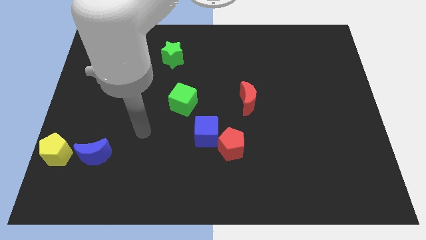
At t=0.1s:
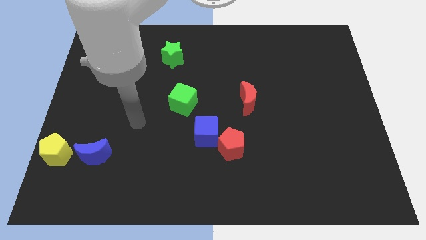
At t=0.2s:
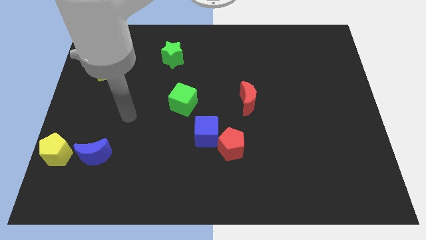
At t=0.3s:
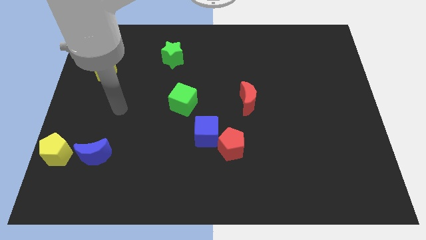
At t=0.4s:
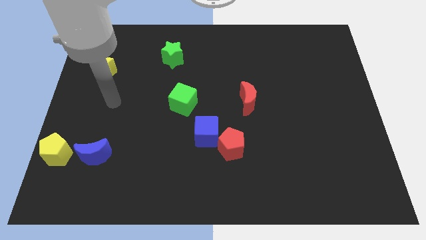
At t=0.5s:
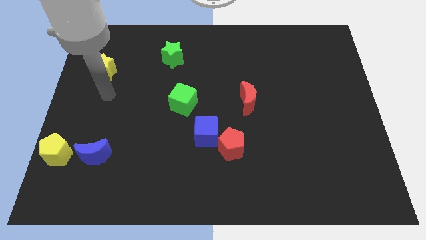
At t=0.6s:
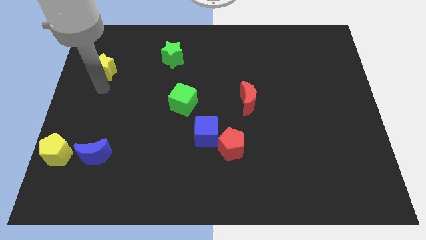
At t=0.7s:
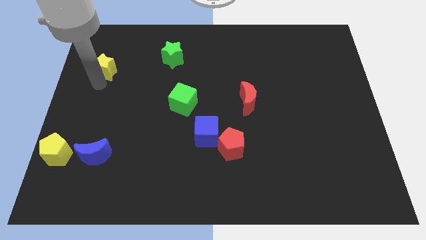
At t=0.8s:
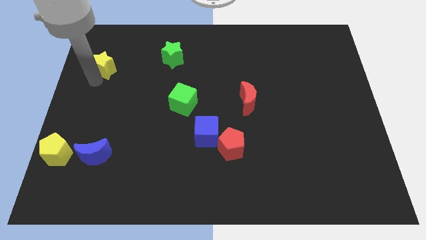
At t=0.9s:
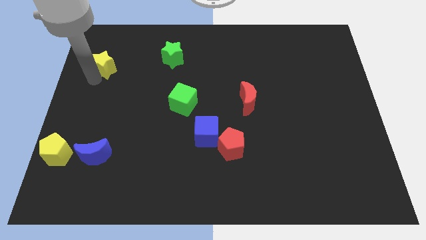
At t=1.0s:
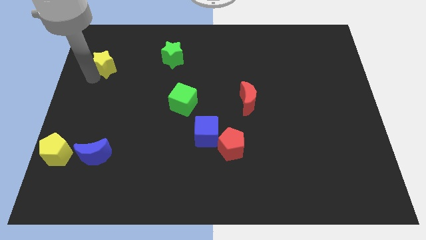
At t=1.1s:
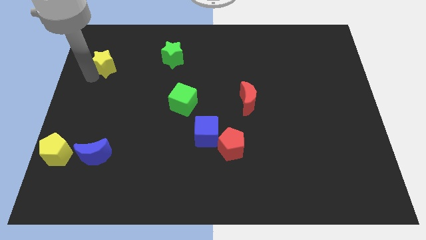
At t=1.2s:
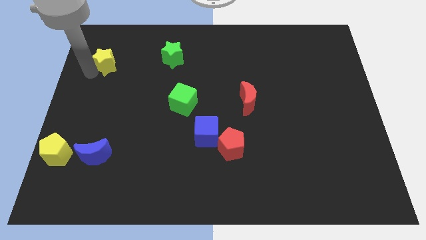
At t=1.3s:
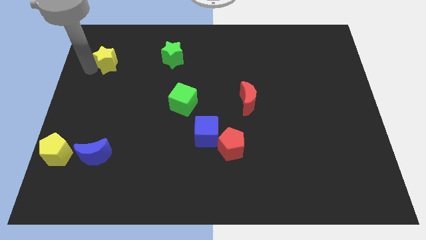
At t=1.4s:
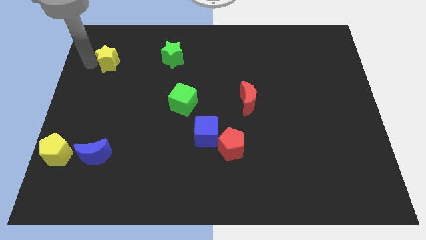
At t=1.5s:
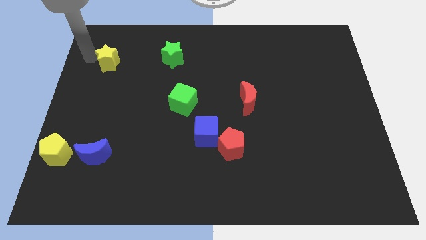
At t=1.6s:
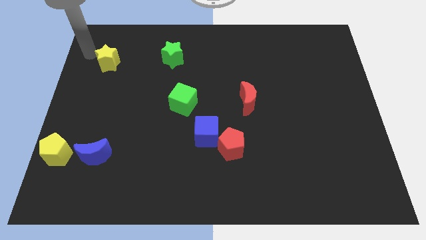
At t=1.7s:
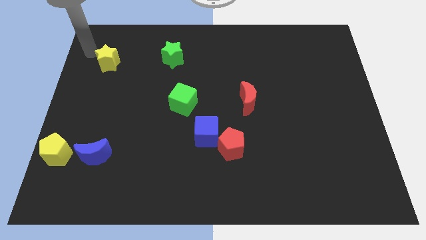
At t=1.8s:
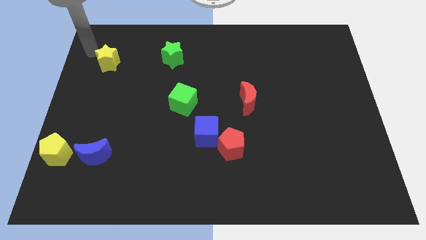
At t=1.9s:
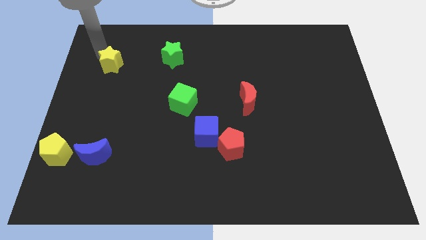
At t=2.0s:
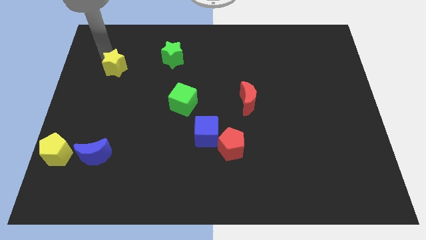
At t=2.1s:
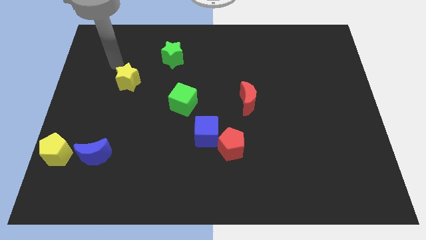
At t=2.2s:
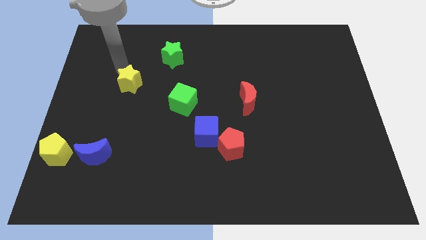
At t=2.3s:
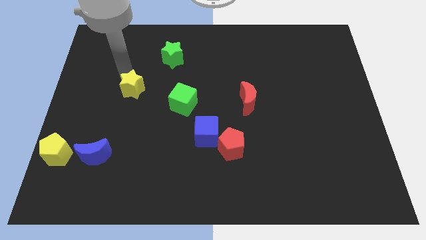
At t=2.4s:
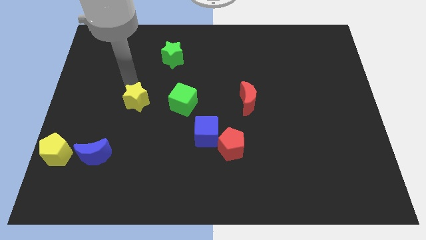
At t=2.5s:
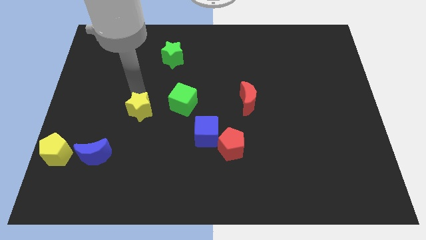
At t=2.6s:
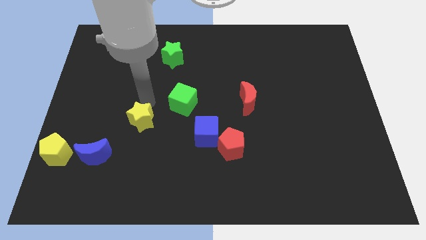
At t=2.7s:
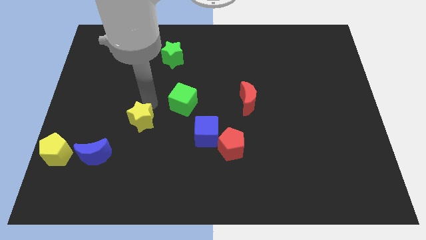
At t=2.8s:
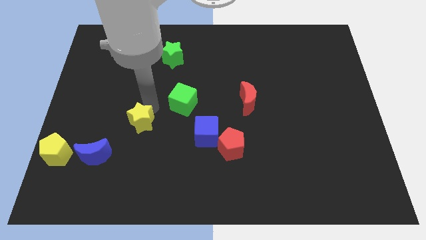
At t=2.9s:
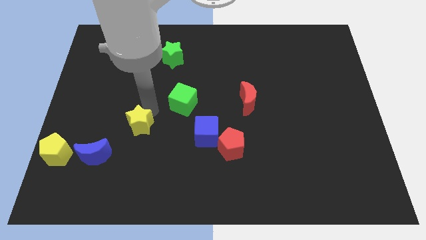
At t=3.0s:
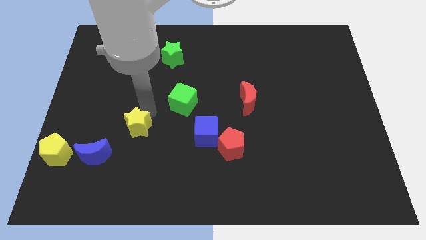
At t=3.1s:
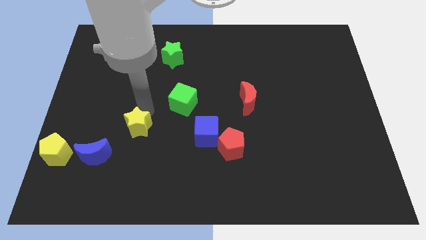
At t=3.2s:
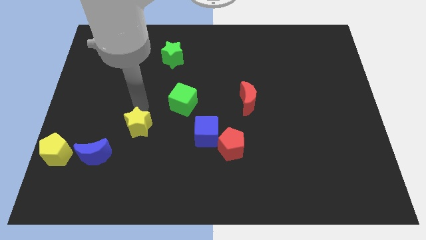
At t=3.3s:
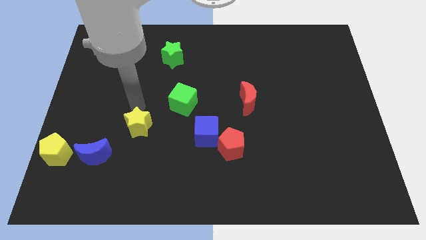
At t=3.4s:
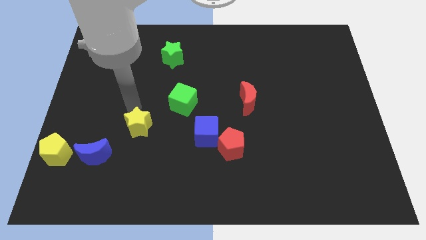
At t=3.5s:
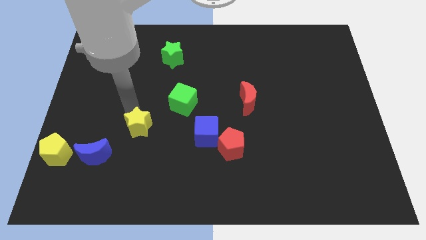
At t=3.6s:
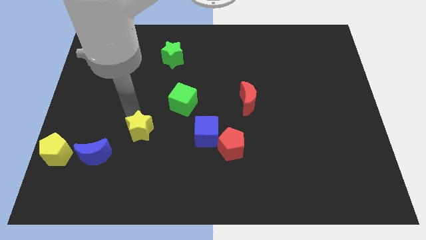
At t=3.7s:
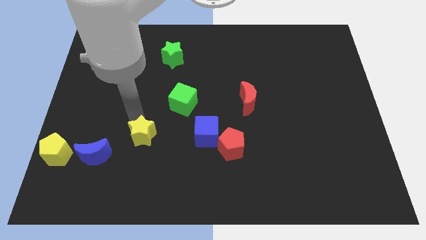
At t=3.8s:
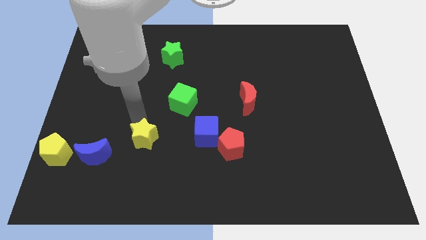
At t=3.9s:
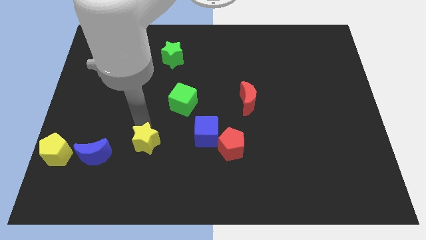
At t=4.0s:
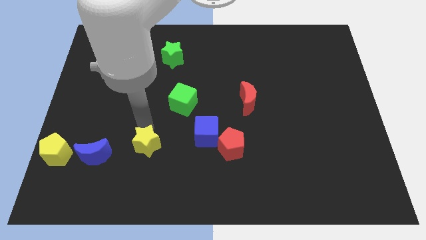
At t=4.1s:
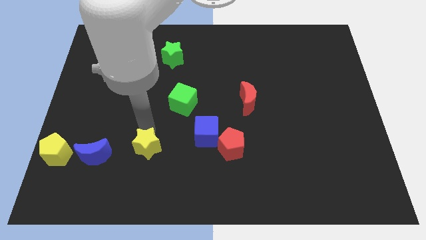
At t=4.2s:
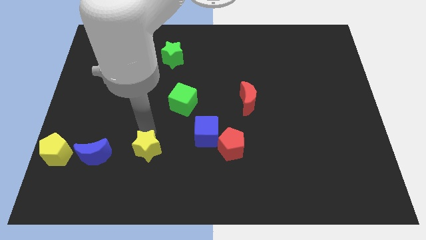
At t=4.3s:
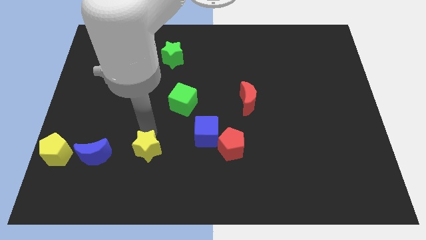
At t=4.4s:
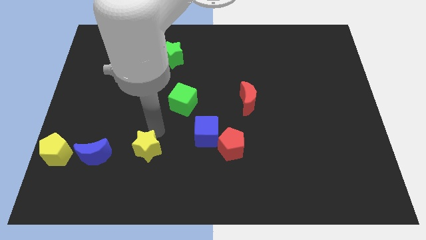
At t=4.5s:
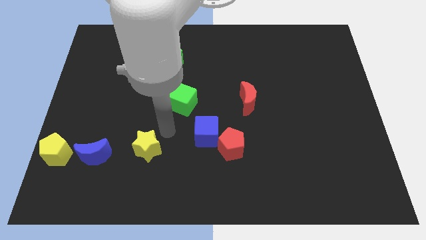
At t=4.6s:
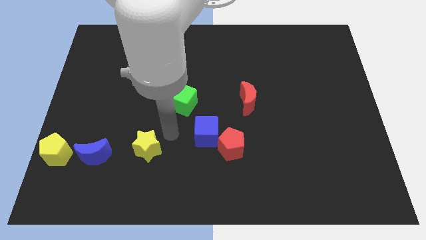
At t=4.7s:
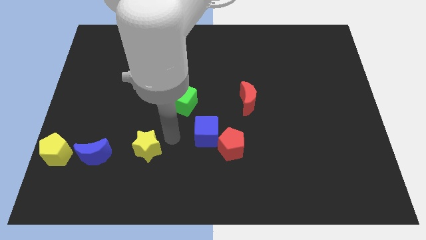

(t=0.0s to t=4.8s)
move the yellow star to the right of the blue moon

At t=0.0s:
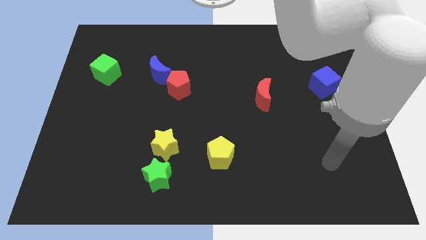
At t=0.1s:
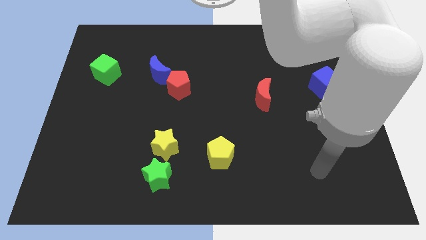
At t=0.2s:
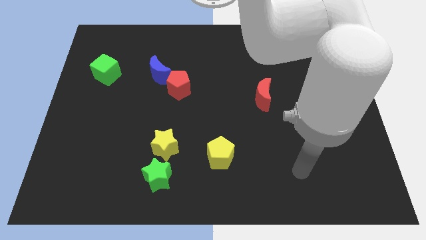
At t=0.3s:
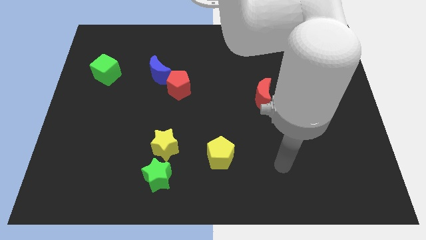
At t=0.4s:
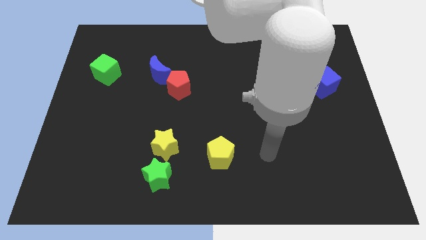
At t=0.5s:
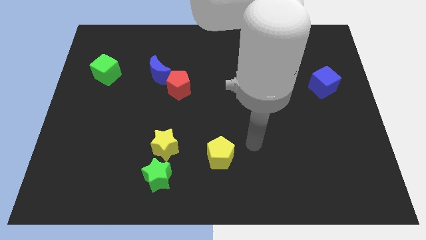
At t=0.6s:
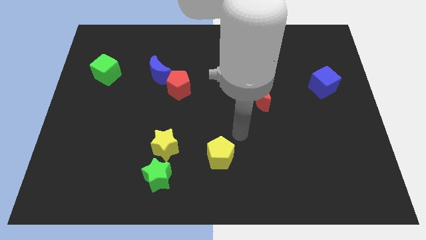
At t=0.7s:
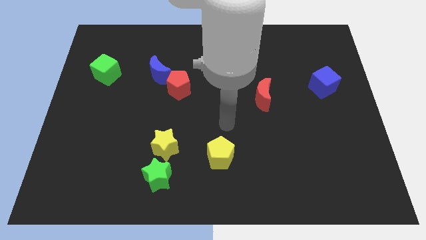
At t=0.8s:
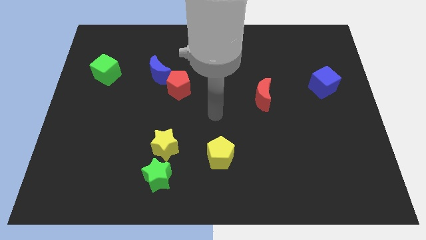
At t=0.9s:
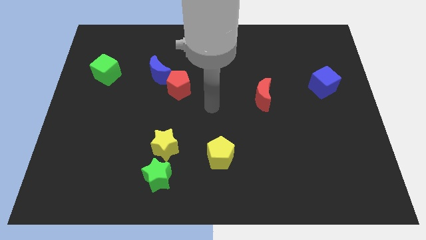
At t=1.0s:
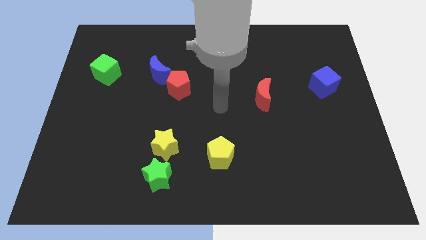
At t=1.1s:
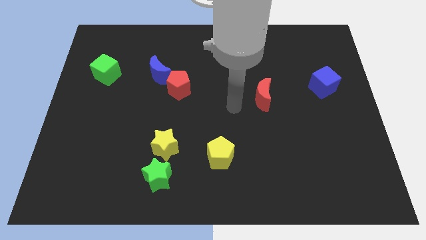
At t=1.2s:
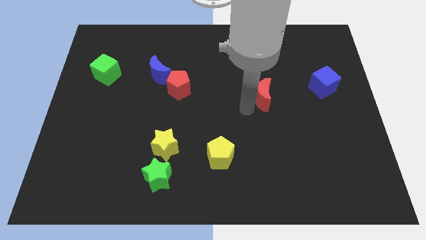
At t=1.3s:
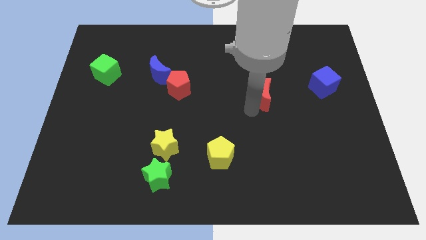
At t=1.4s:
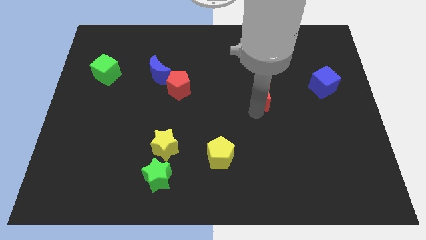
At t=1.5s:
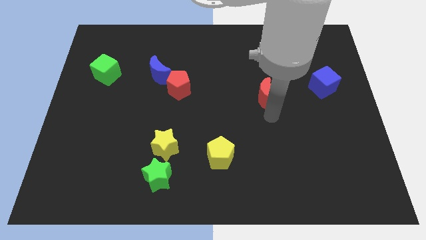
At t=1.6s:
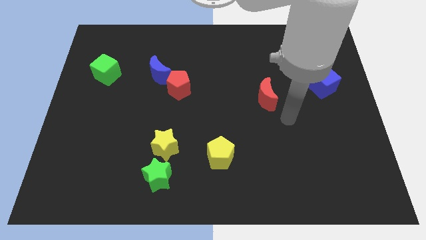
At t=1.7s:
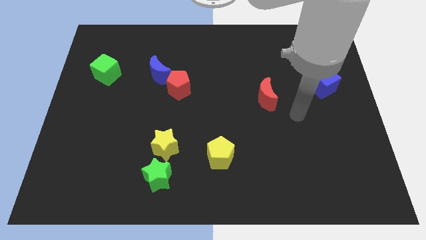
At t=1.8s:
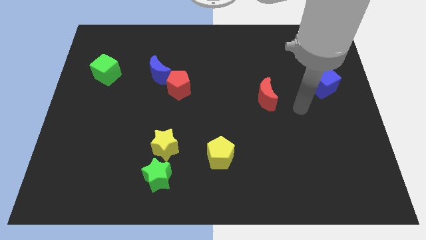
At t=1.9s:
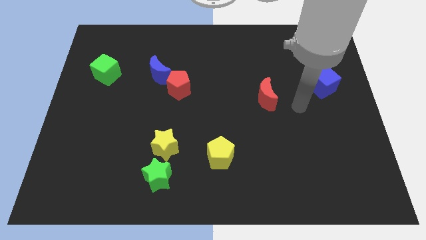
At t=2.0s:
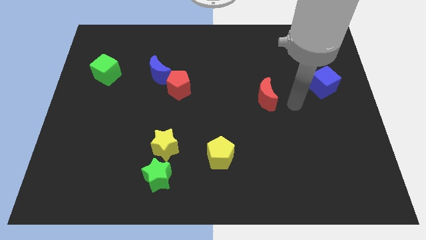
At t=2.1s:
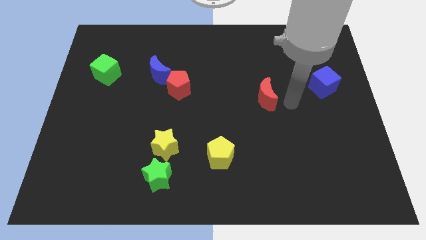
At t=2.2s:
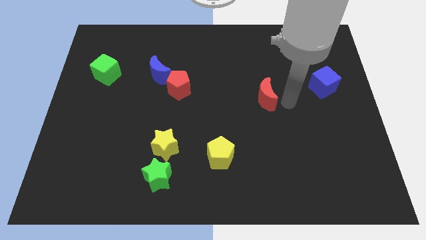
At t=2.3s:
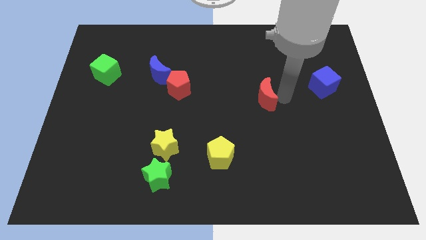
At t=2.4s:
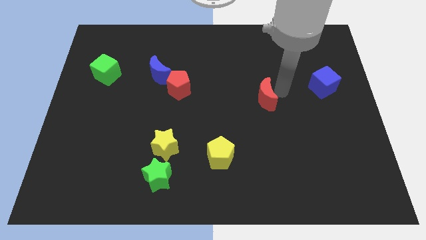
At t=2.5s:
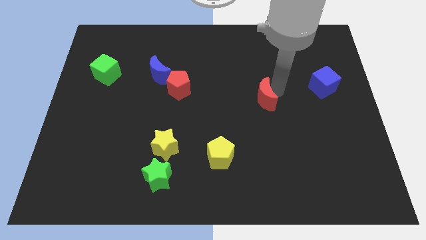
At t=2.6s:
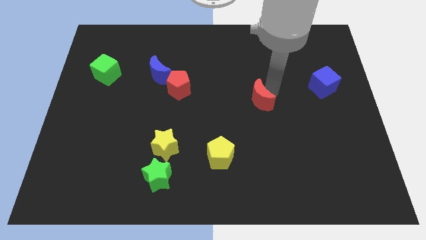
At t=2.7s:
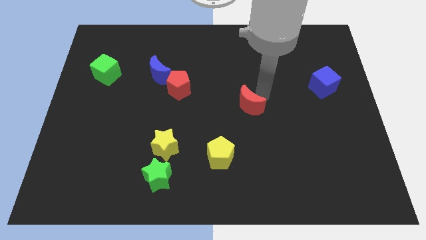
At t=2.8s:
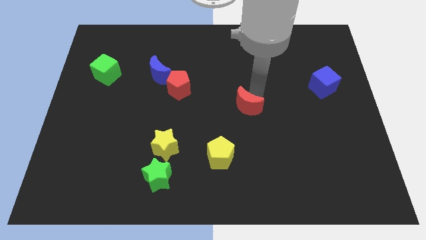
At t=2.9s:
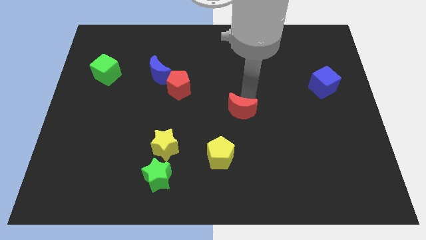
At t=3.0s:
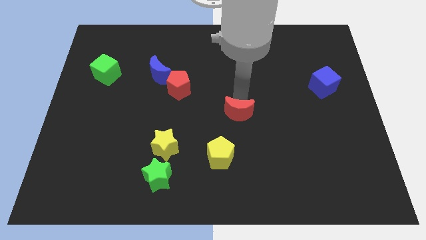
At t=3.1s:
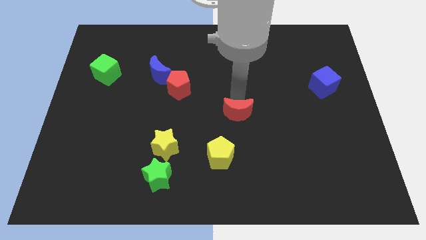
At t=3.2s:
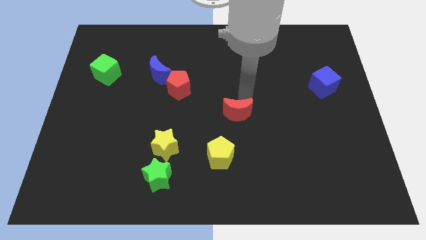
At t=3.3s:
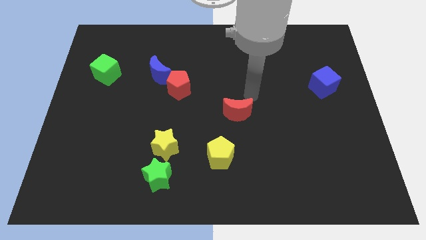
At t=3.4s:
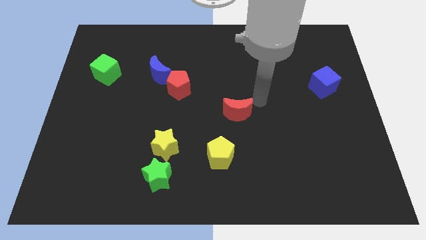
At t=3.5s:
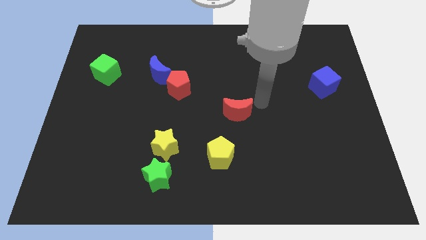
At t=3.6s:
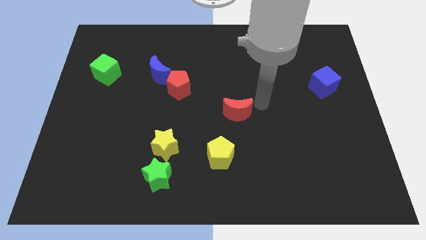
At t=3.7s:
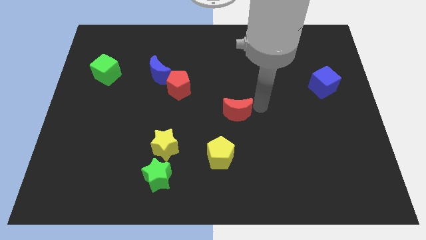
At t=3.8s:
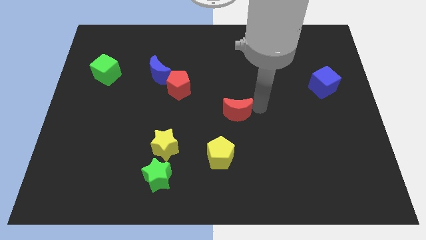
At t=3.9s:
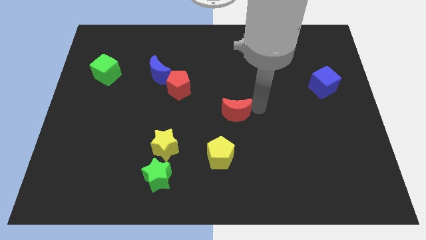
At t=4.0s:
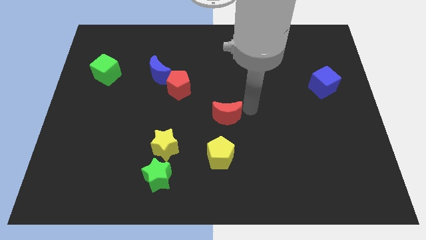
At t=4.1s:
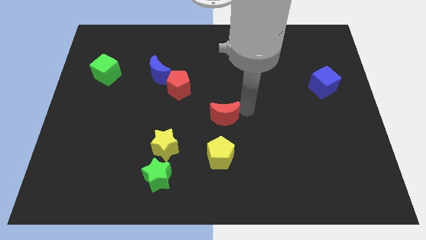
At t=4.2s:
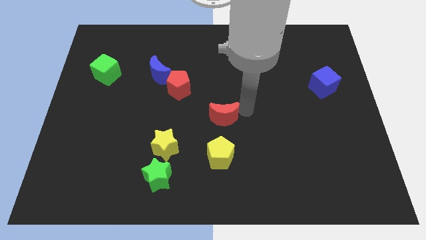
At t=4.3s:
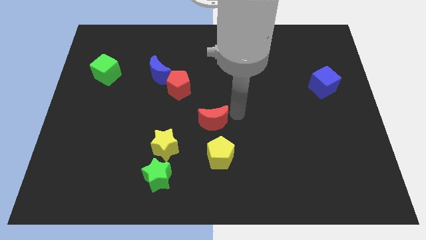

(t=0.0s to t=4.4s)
move the red the crescent to the top of the yellow pentagon
